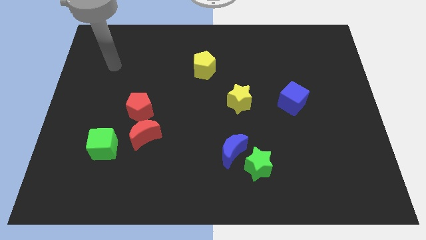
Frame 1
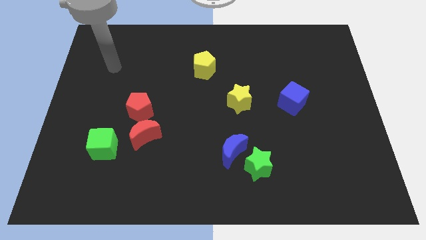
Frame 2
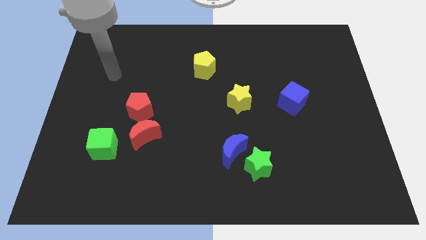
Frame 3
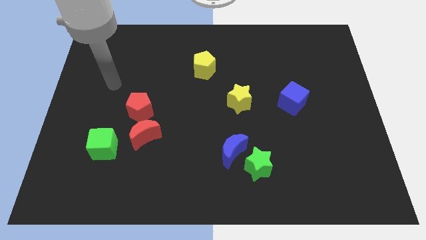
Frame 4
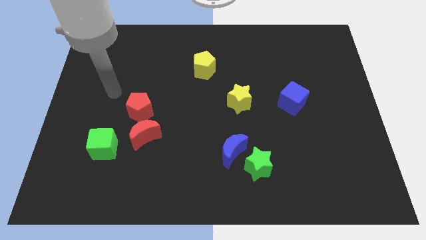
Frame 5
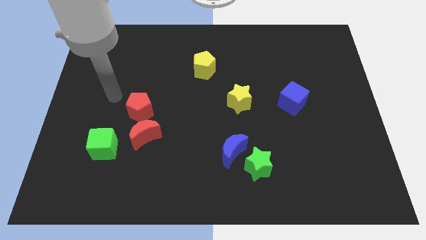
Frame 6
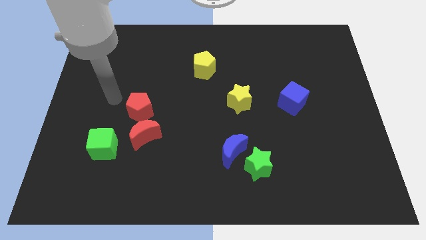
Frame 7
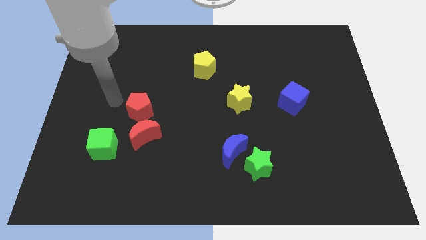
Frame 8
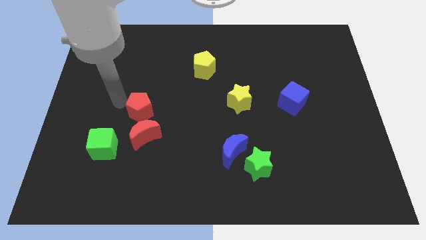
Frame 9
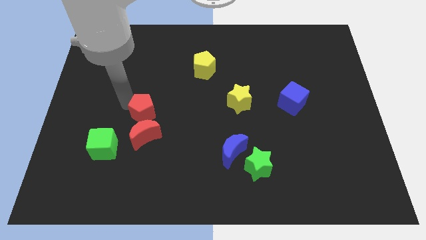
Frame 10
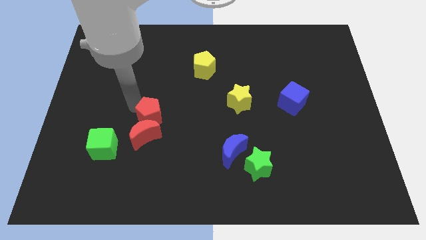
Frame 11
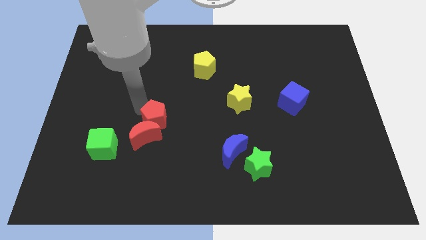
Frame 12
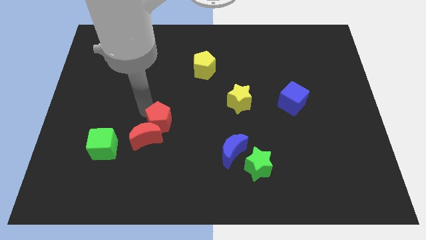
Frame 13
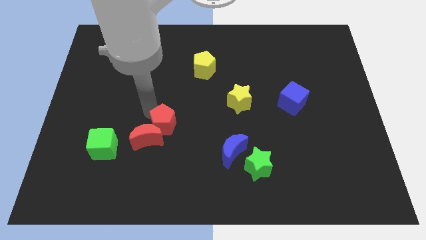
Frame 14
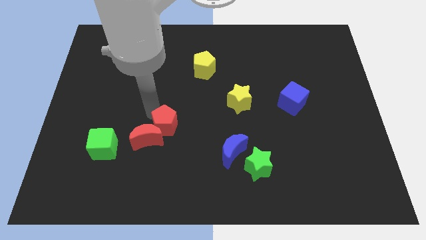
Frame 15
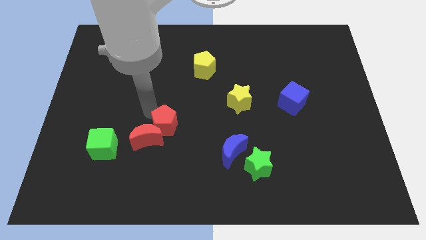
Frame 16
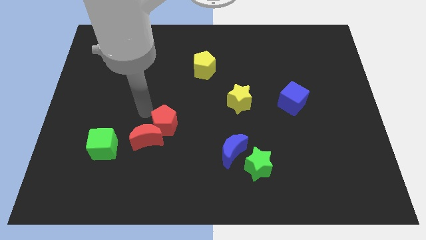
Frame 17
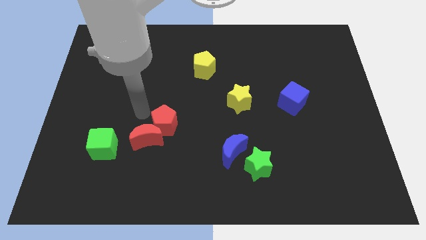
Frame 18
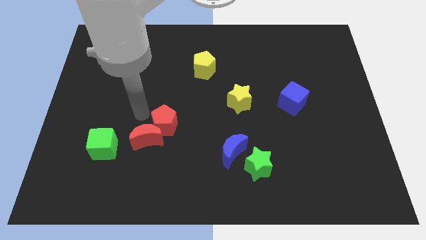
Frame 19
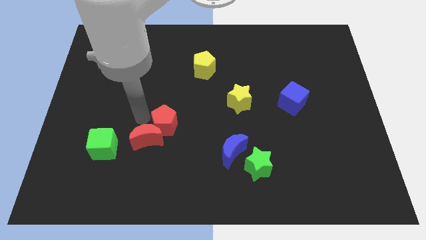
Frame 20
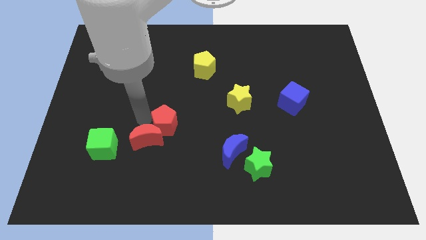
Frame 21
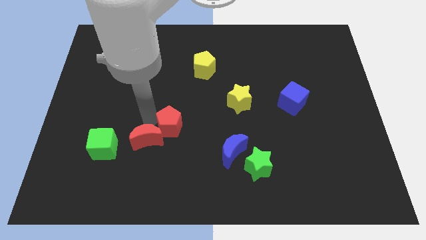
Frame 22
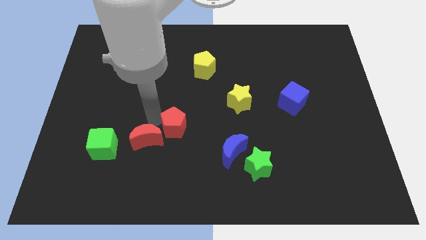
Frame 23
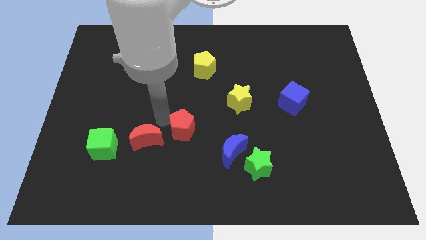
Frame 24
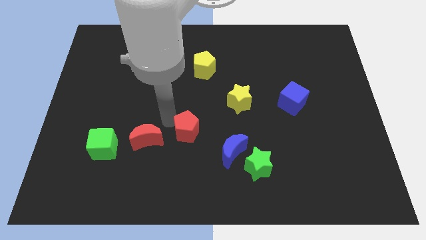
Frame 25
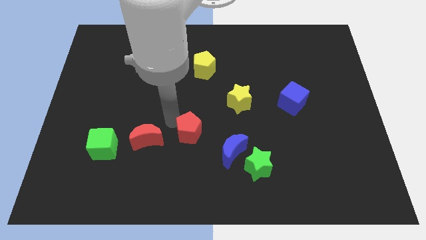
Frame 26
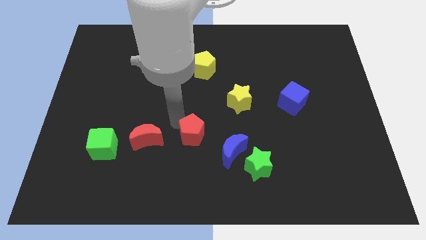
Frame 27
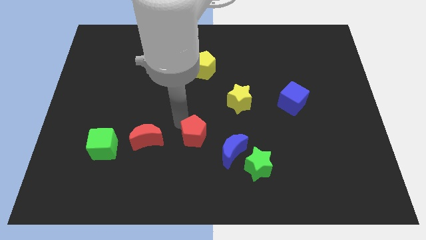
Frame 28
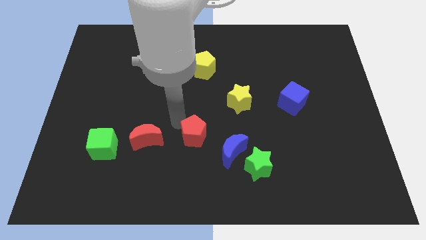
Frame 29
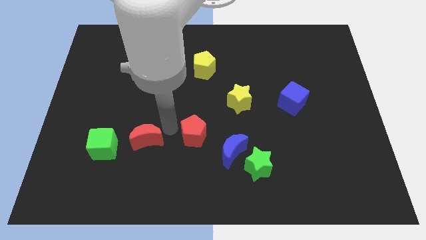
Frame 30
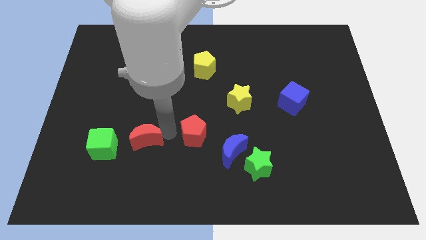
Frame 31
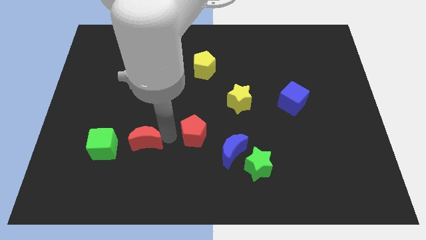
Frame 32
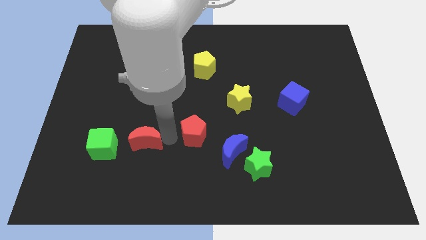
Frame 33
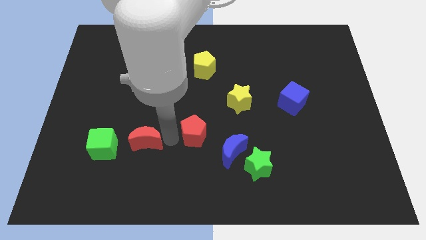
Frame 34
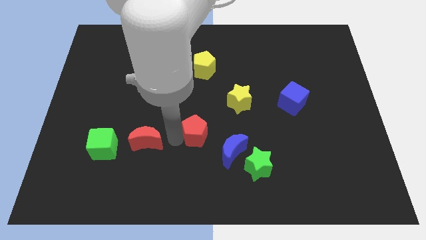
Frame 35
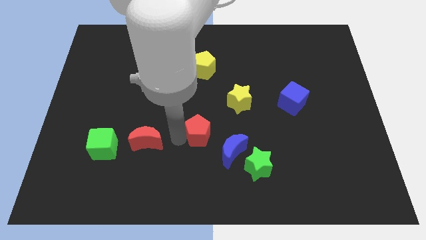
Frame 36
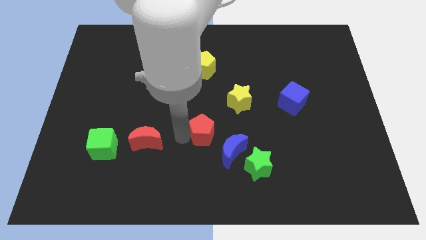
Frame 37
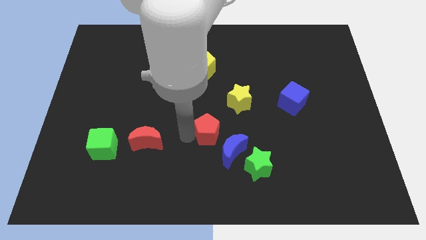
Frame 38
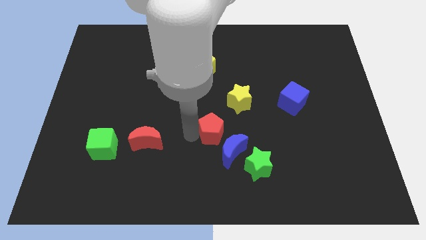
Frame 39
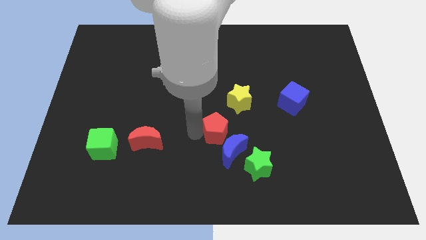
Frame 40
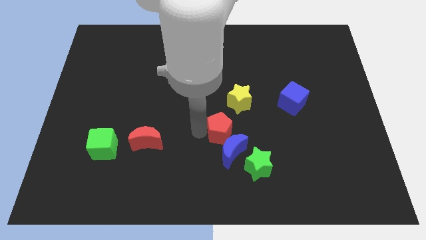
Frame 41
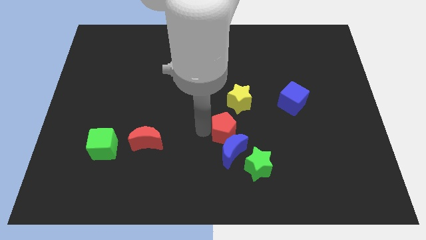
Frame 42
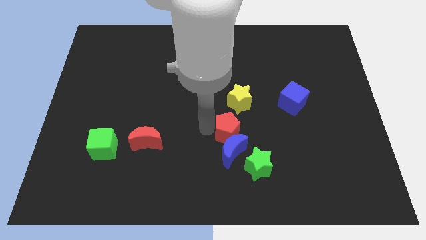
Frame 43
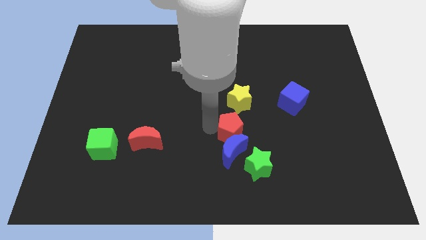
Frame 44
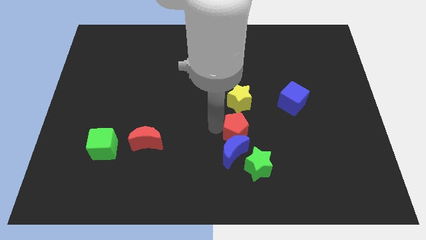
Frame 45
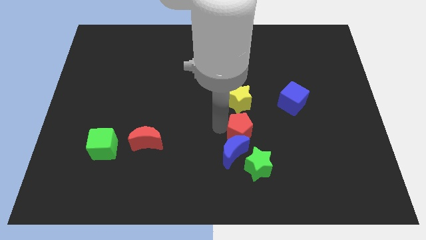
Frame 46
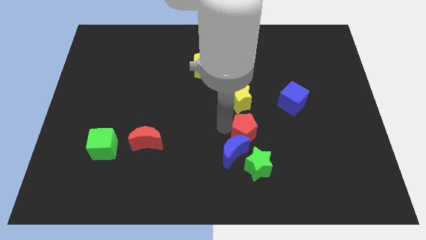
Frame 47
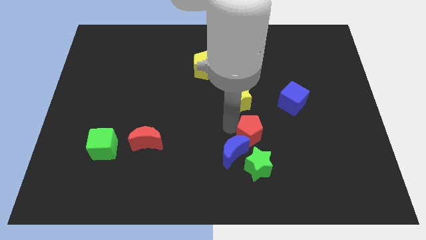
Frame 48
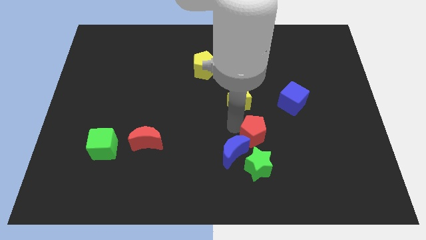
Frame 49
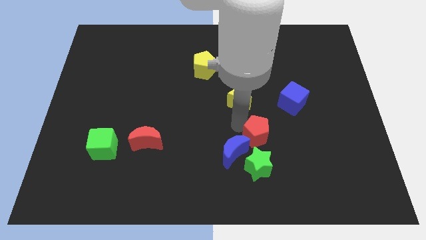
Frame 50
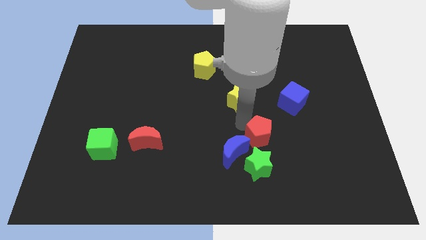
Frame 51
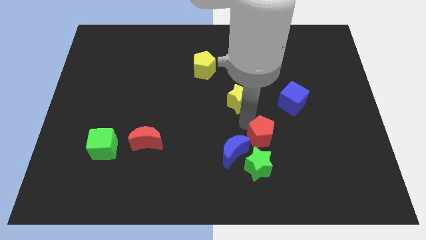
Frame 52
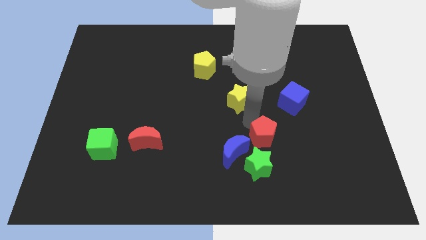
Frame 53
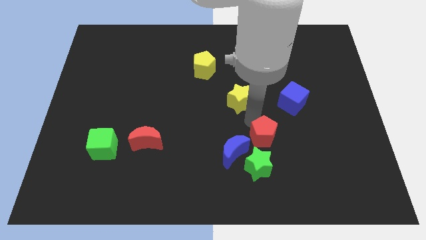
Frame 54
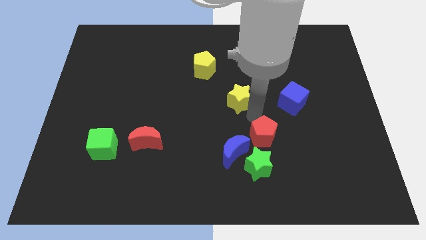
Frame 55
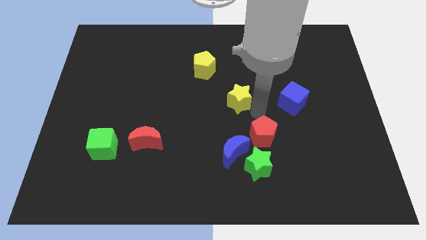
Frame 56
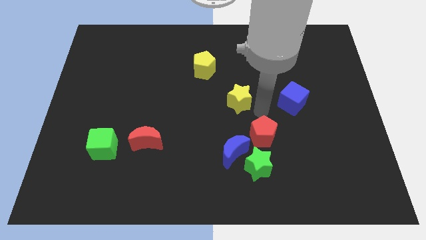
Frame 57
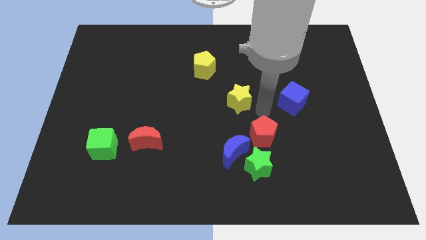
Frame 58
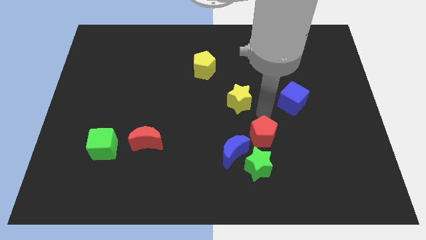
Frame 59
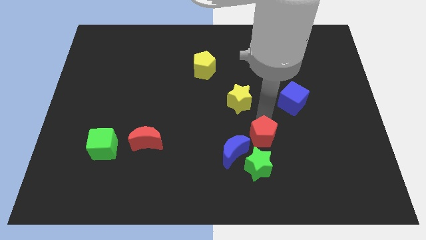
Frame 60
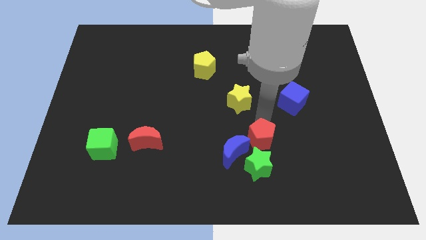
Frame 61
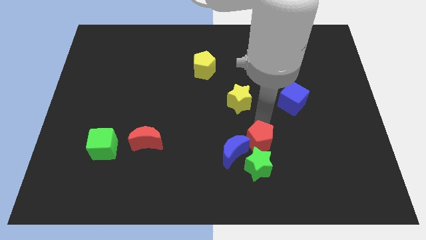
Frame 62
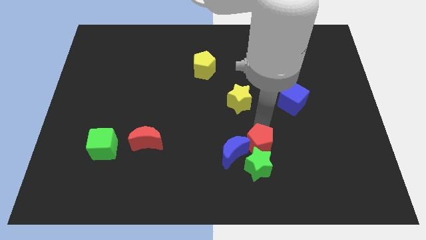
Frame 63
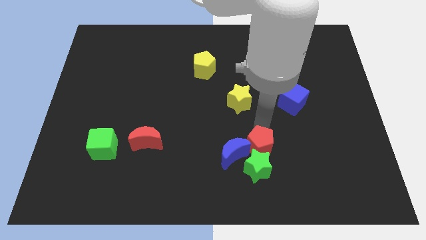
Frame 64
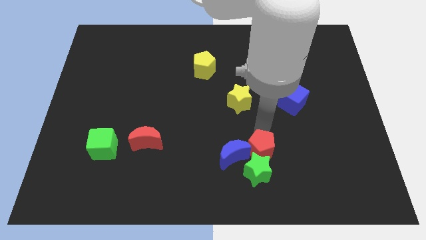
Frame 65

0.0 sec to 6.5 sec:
put the red pentagon to the green star

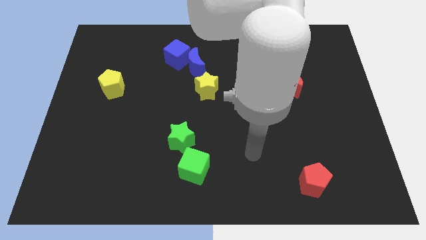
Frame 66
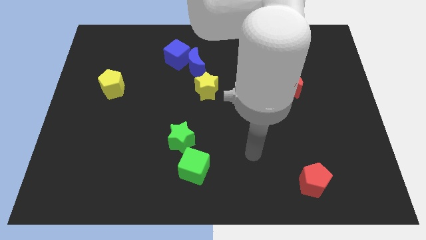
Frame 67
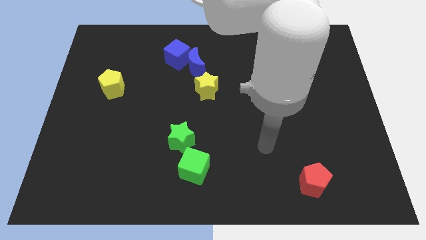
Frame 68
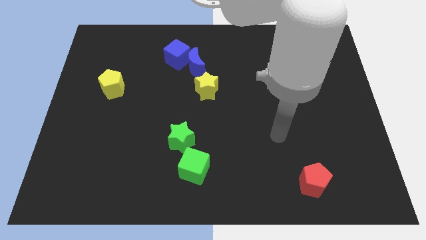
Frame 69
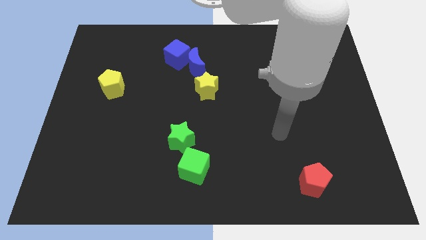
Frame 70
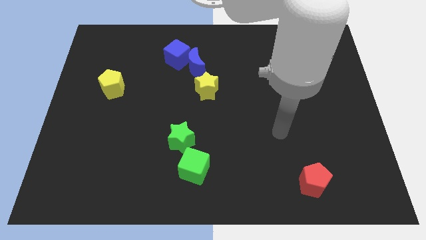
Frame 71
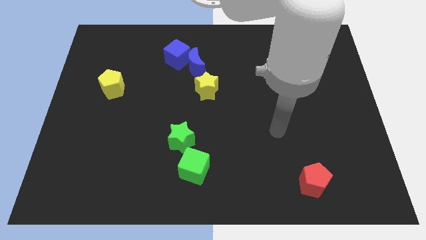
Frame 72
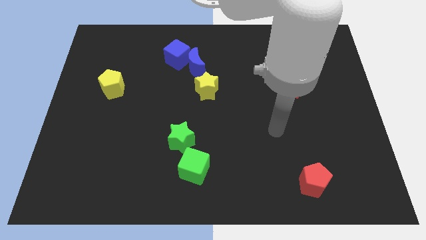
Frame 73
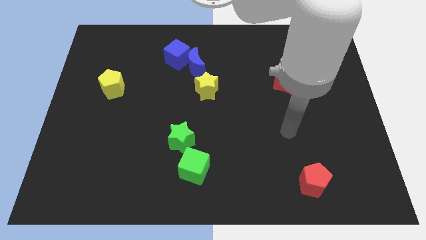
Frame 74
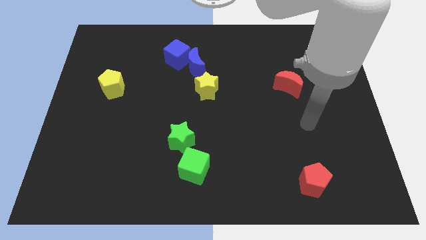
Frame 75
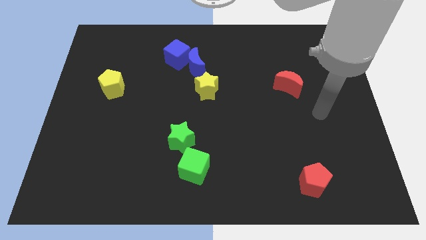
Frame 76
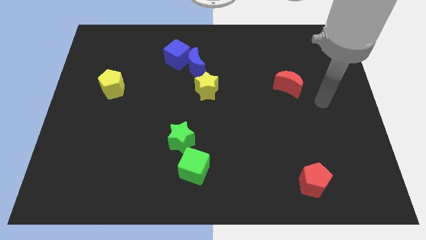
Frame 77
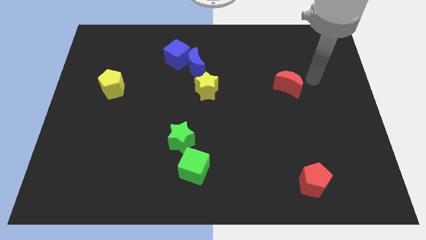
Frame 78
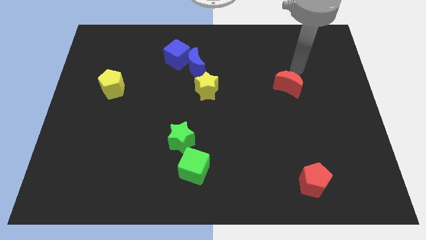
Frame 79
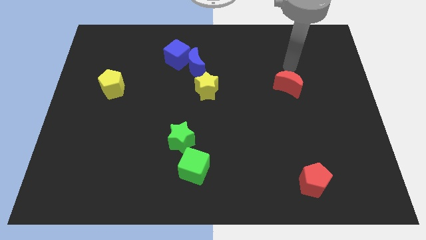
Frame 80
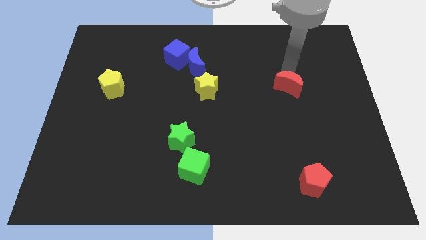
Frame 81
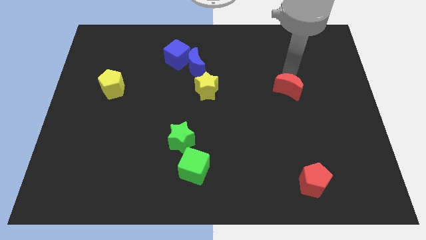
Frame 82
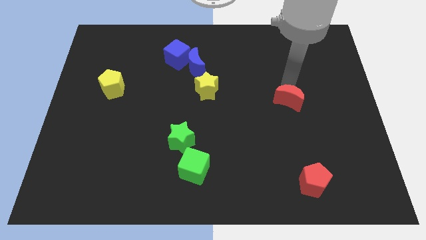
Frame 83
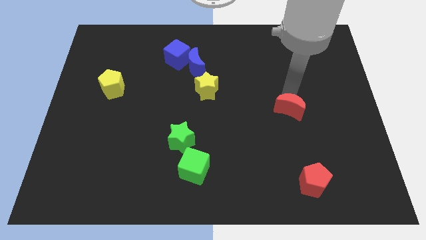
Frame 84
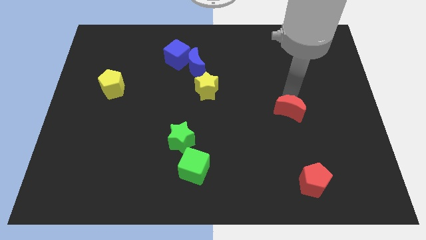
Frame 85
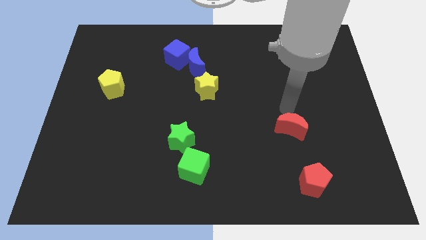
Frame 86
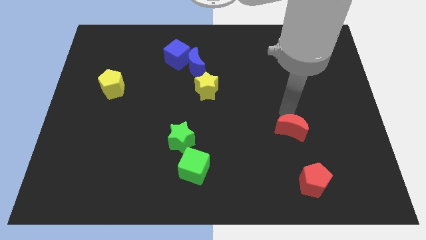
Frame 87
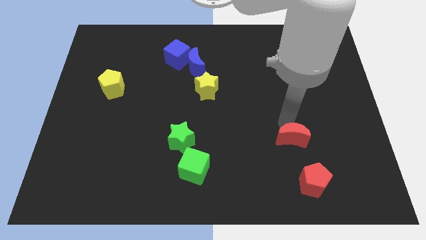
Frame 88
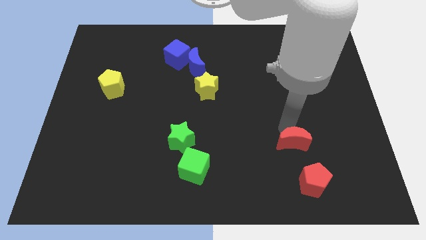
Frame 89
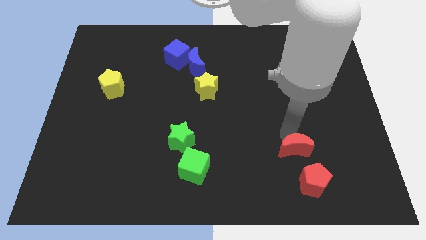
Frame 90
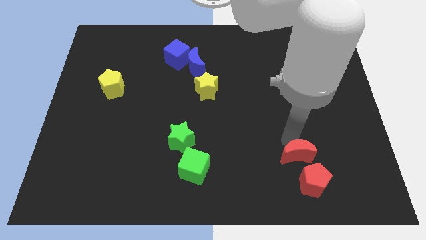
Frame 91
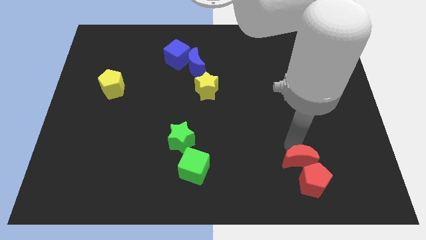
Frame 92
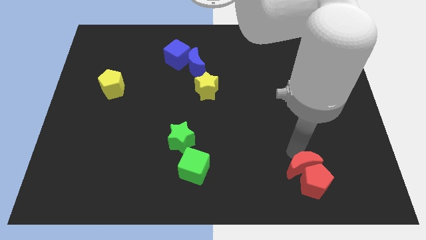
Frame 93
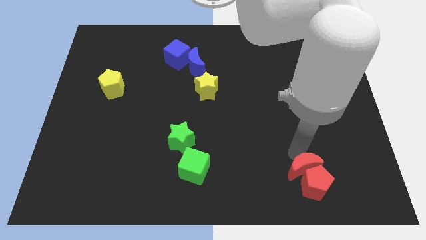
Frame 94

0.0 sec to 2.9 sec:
push the red moon to the red pentagon
